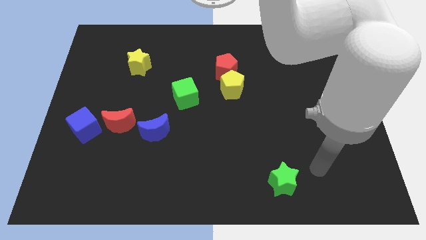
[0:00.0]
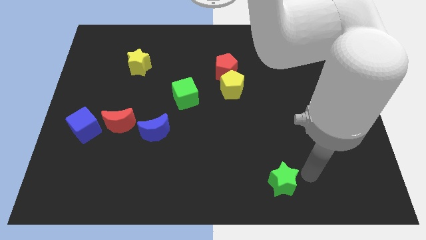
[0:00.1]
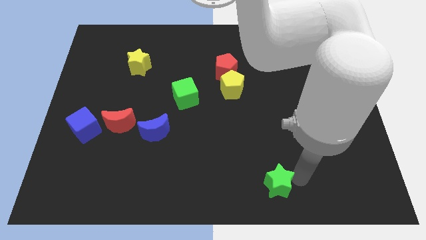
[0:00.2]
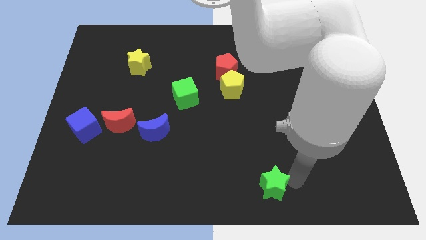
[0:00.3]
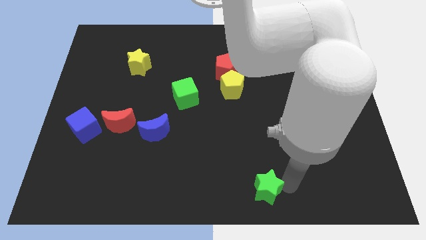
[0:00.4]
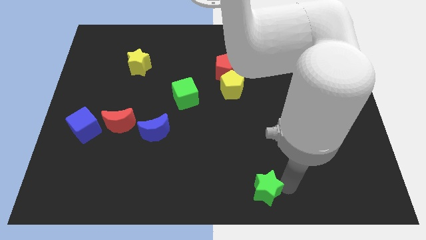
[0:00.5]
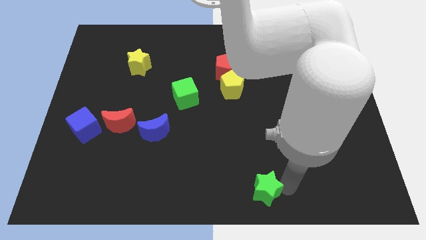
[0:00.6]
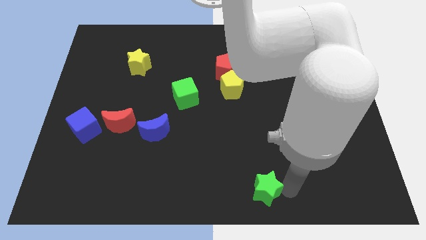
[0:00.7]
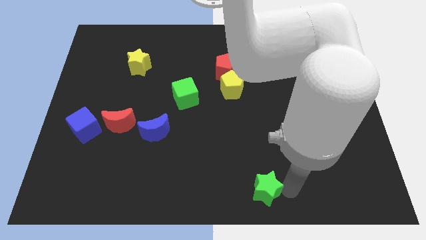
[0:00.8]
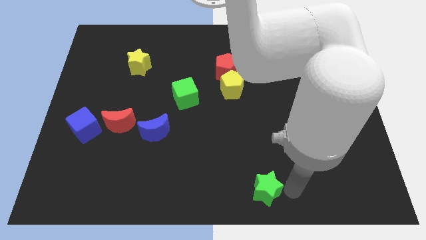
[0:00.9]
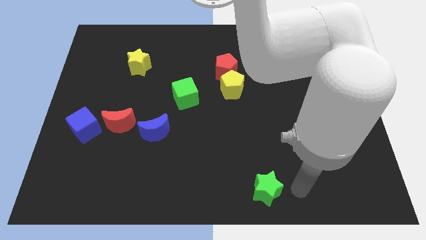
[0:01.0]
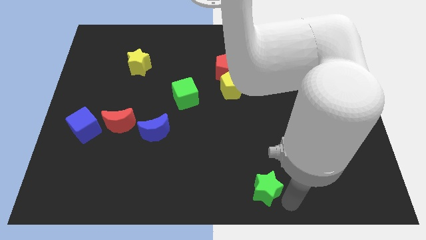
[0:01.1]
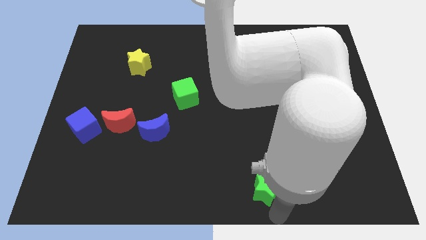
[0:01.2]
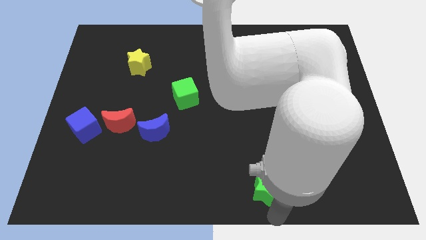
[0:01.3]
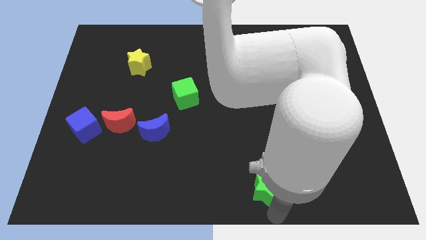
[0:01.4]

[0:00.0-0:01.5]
push the green star towards the bottom side of the board

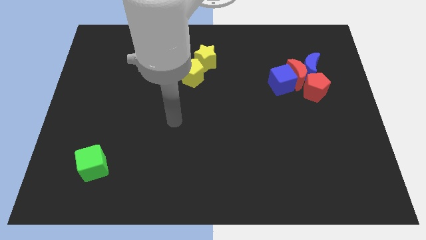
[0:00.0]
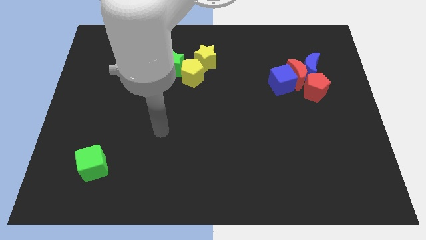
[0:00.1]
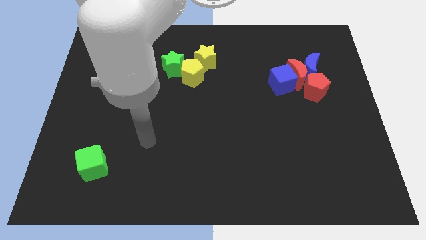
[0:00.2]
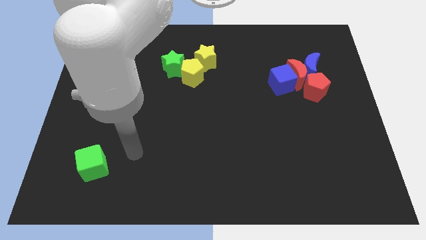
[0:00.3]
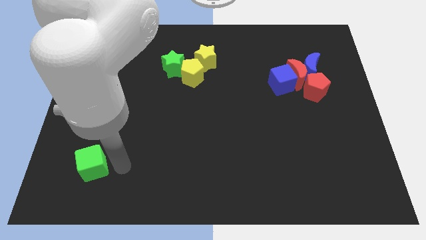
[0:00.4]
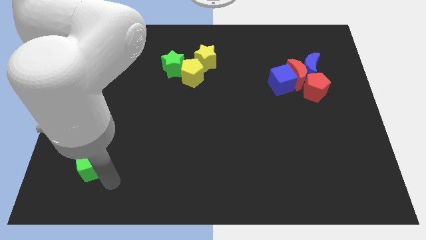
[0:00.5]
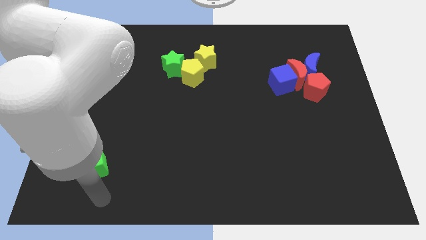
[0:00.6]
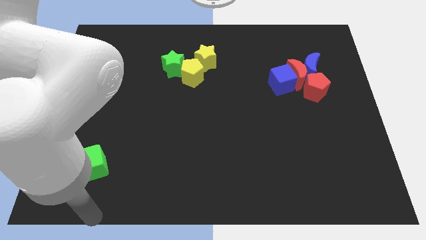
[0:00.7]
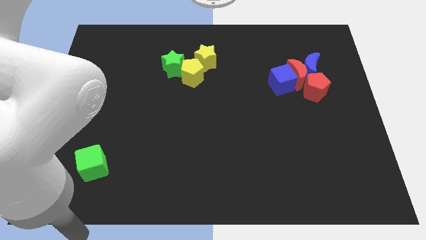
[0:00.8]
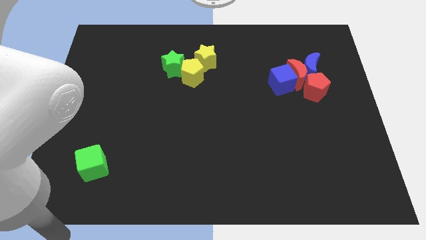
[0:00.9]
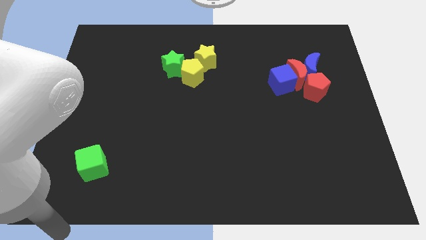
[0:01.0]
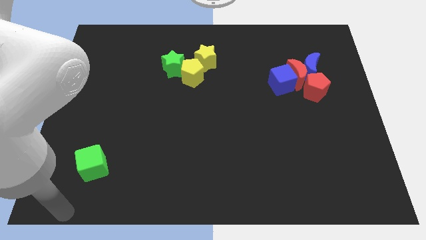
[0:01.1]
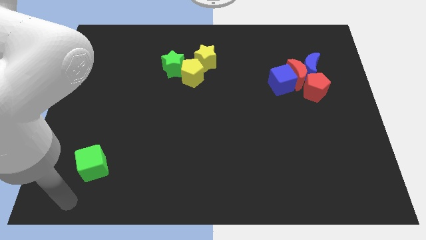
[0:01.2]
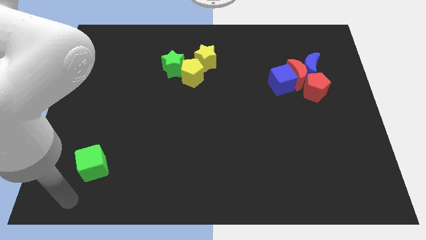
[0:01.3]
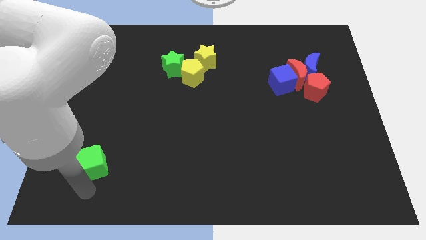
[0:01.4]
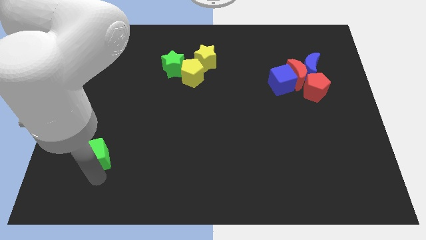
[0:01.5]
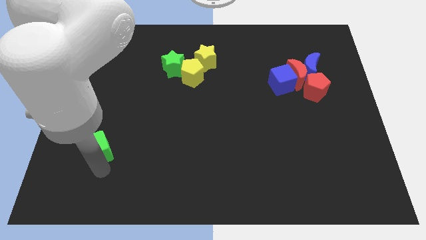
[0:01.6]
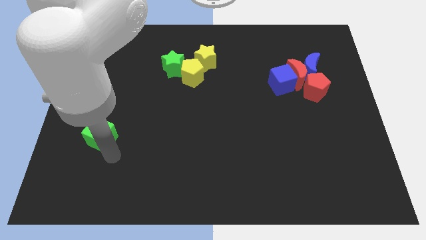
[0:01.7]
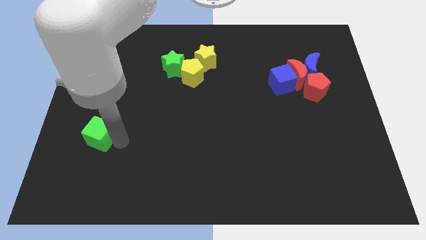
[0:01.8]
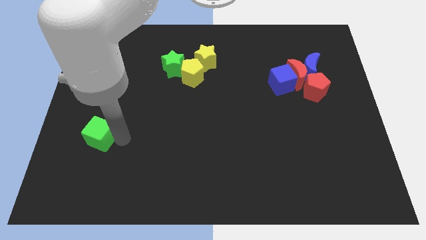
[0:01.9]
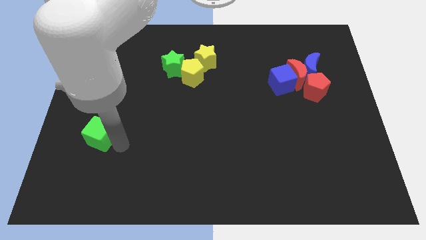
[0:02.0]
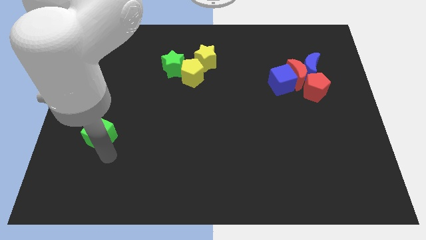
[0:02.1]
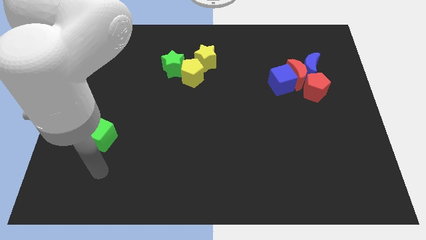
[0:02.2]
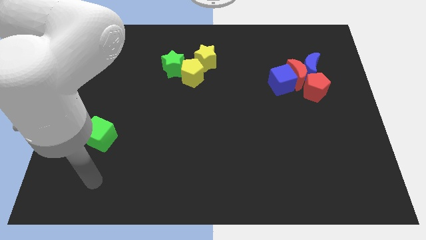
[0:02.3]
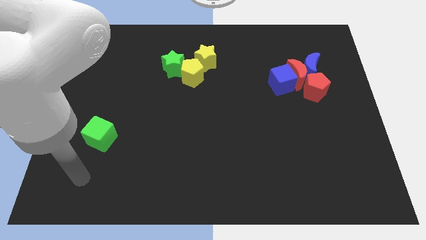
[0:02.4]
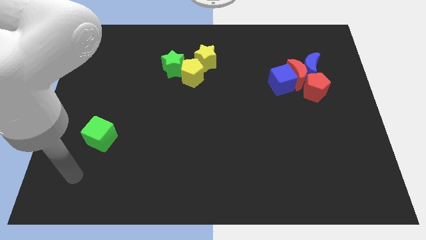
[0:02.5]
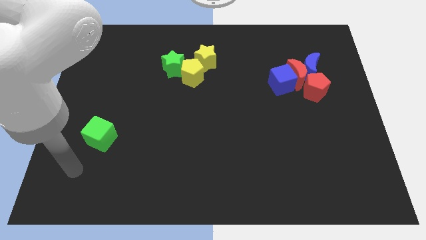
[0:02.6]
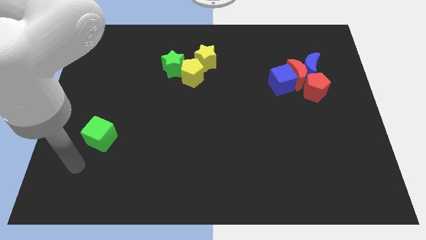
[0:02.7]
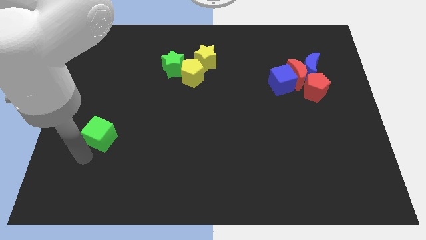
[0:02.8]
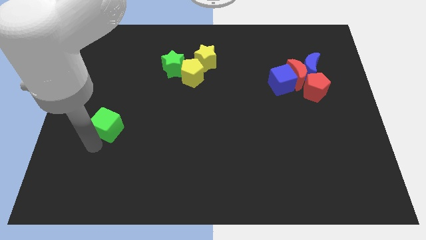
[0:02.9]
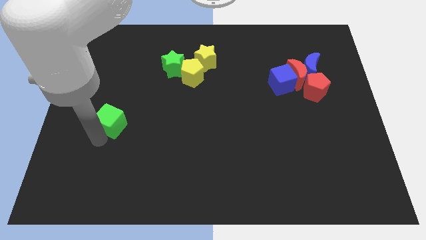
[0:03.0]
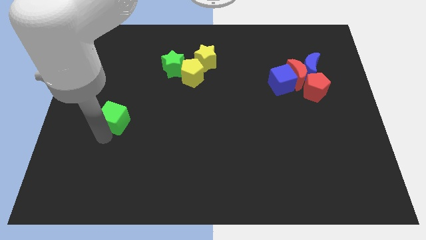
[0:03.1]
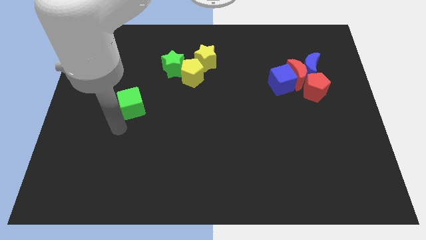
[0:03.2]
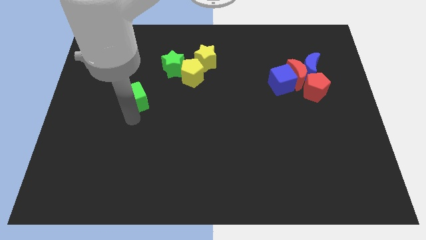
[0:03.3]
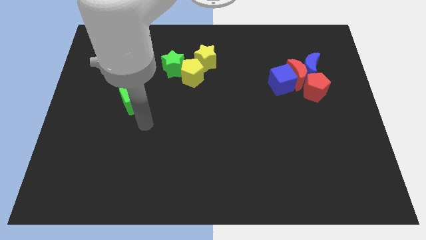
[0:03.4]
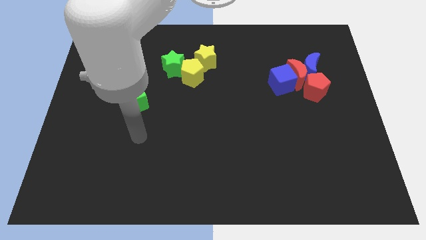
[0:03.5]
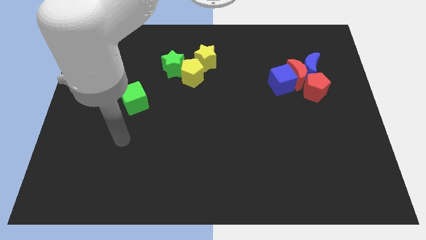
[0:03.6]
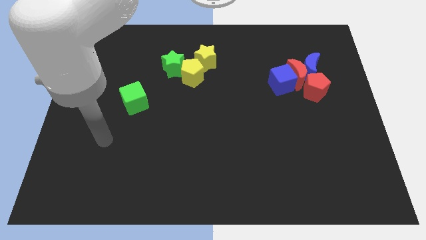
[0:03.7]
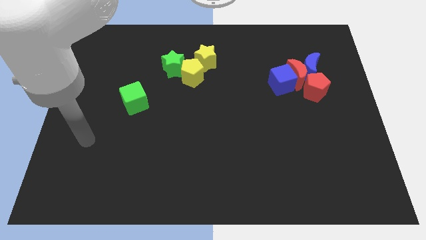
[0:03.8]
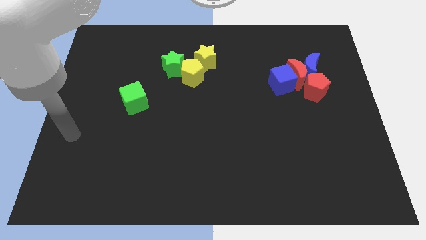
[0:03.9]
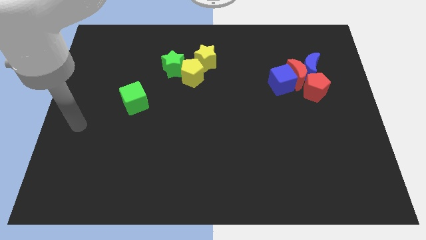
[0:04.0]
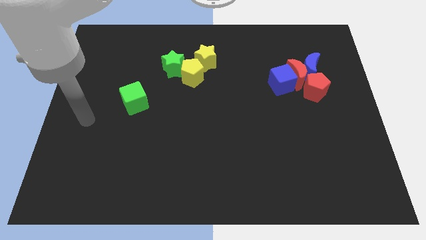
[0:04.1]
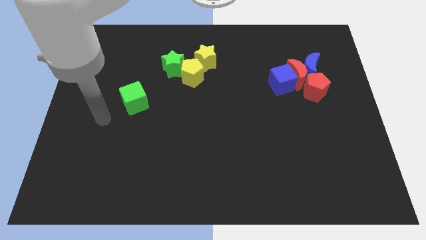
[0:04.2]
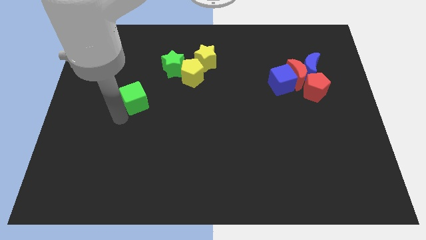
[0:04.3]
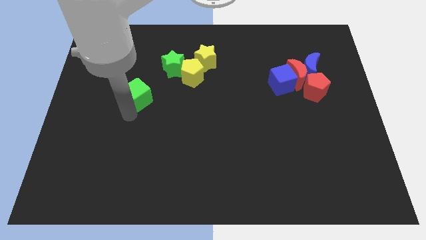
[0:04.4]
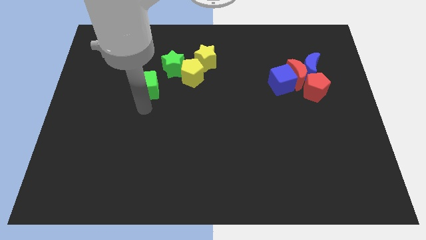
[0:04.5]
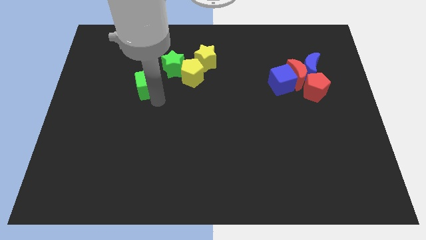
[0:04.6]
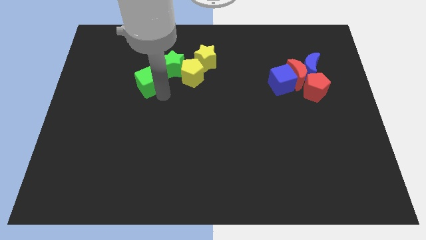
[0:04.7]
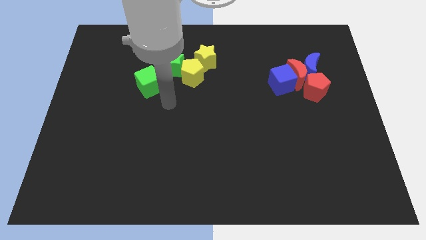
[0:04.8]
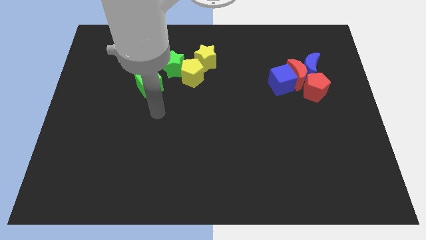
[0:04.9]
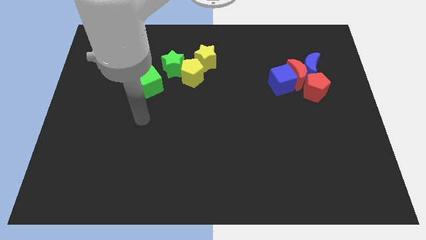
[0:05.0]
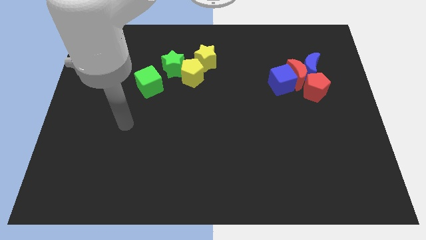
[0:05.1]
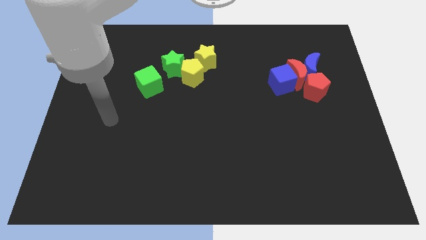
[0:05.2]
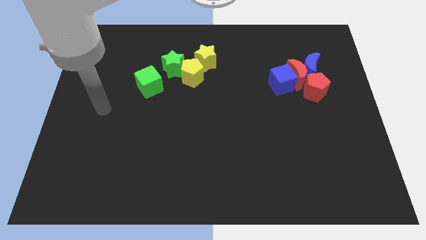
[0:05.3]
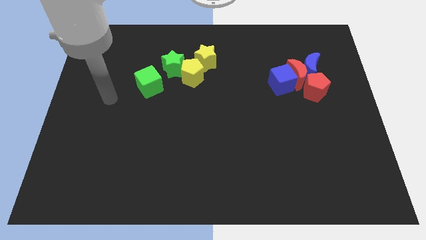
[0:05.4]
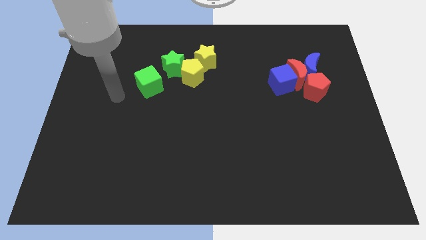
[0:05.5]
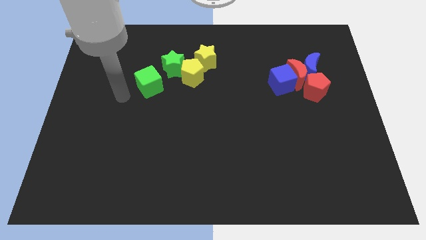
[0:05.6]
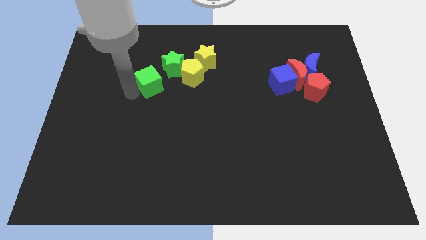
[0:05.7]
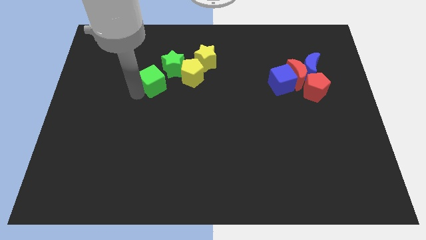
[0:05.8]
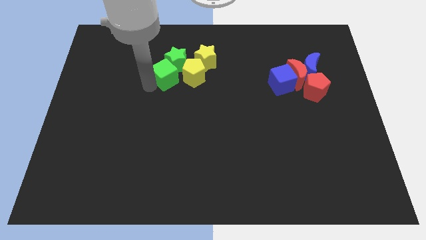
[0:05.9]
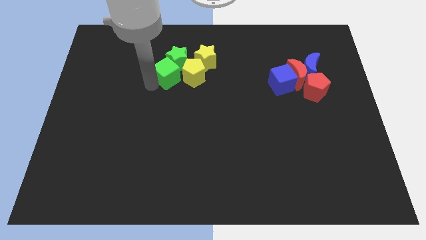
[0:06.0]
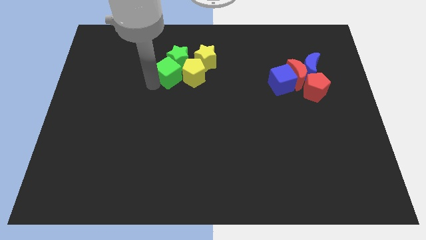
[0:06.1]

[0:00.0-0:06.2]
move the green cube to the green star

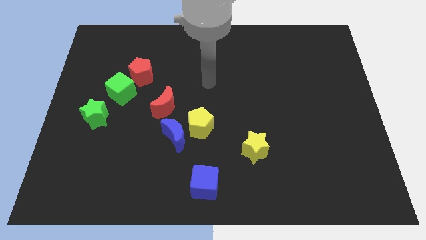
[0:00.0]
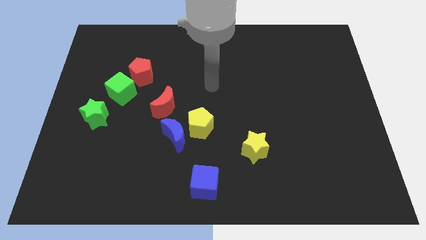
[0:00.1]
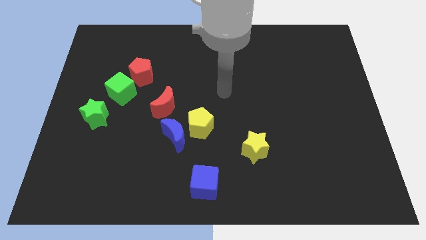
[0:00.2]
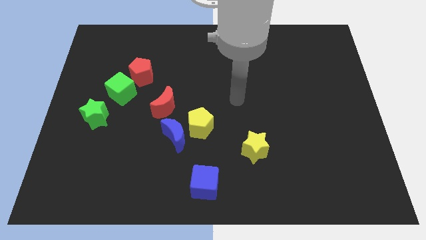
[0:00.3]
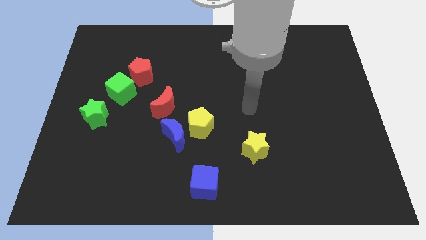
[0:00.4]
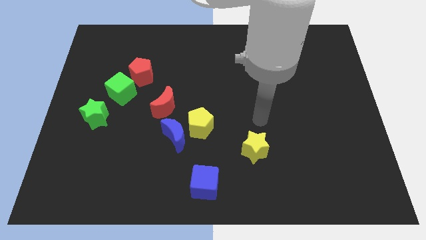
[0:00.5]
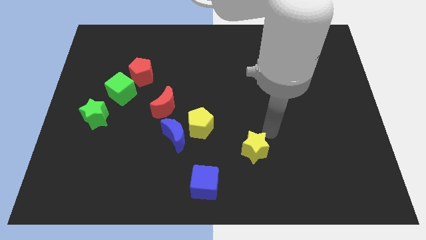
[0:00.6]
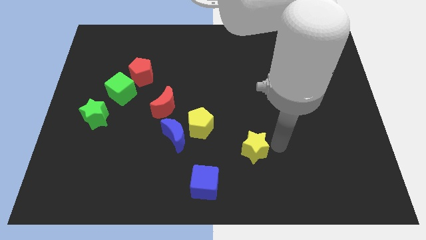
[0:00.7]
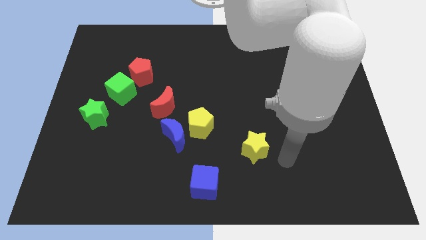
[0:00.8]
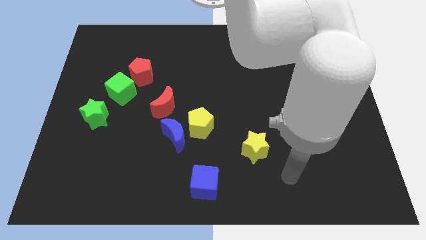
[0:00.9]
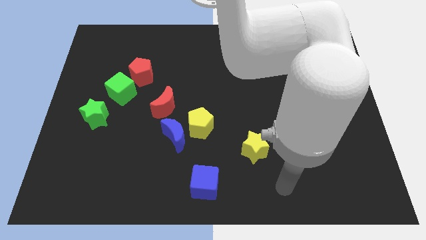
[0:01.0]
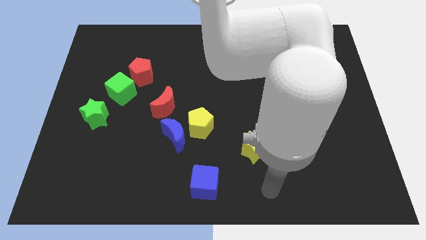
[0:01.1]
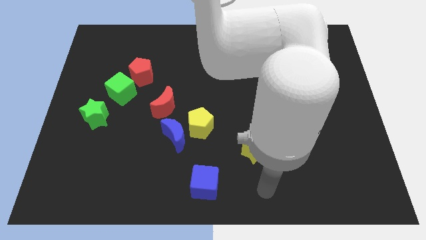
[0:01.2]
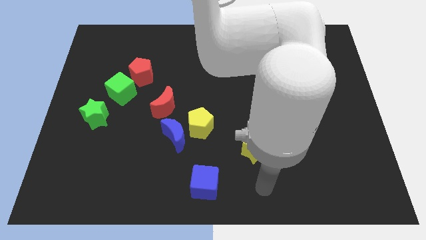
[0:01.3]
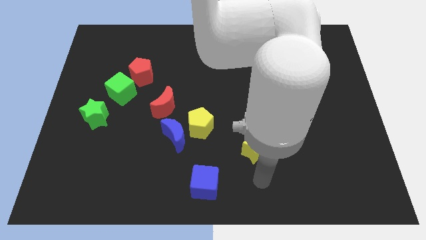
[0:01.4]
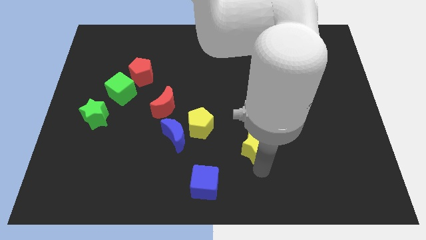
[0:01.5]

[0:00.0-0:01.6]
move your arm towards the yellow star
